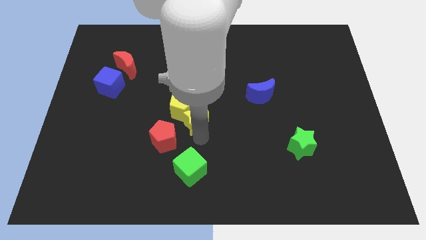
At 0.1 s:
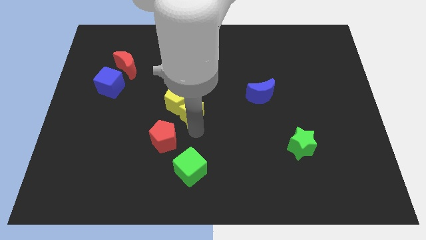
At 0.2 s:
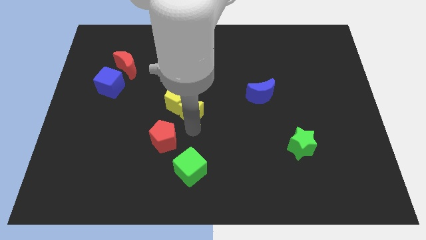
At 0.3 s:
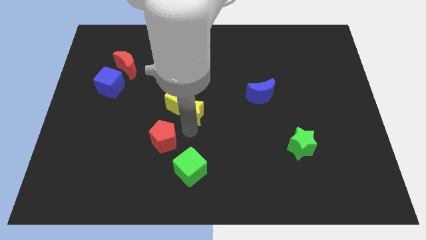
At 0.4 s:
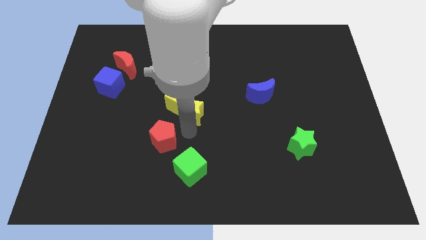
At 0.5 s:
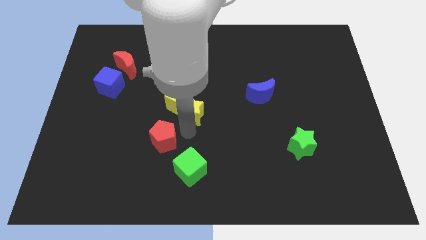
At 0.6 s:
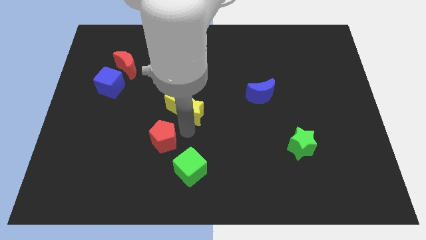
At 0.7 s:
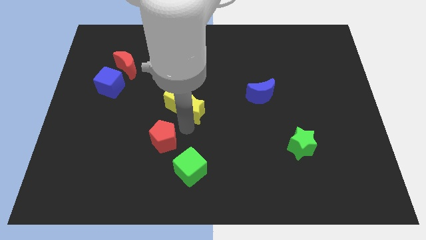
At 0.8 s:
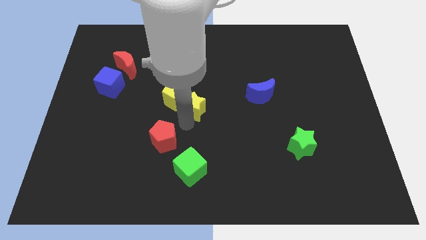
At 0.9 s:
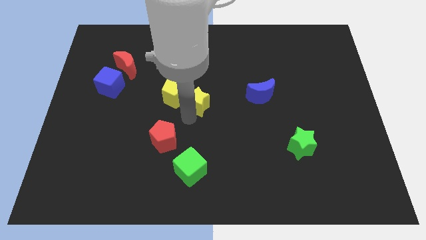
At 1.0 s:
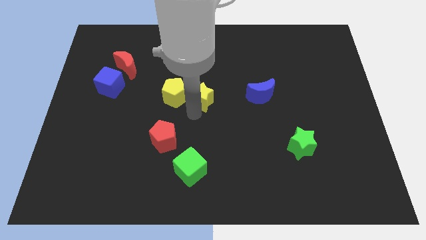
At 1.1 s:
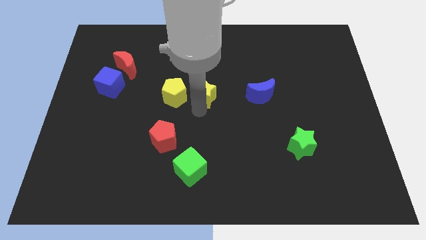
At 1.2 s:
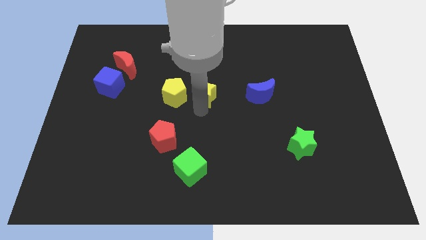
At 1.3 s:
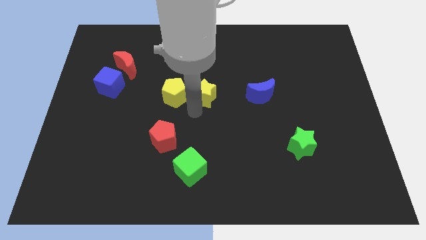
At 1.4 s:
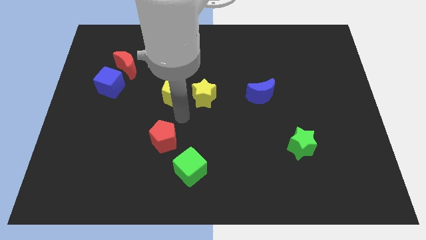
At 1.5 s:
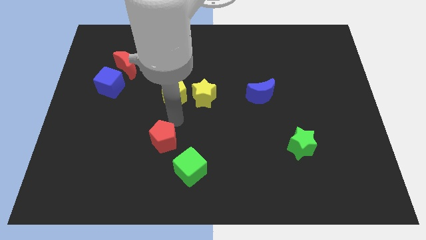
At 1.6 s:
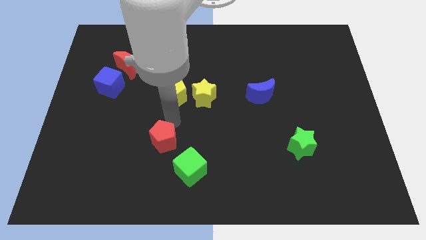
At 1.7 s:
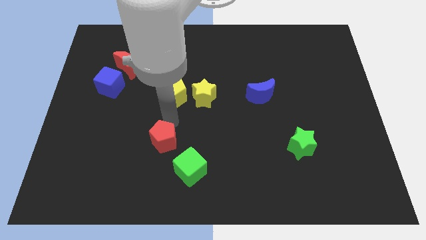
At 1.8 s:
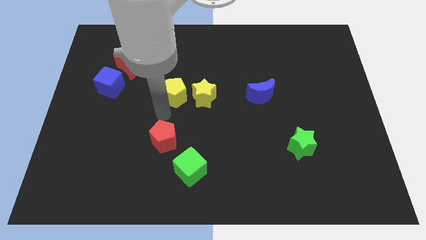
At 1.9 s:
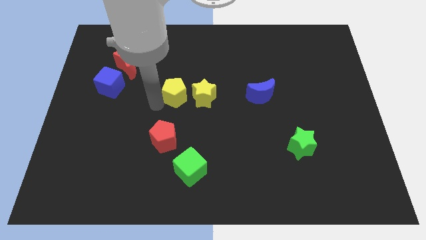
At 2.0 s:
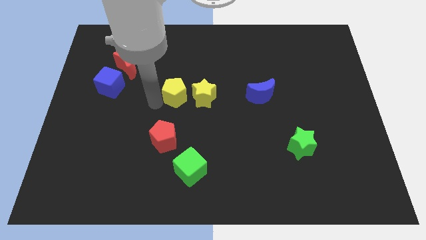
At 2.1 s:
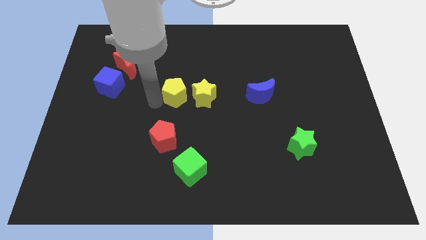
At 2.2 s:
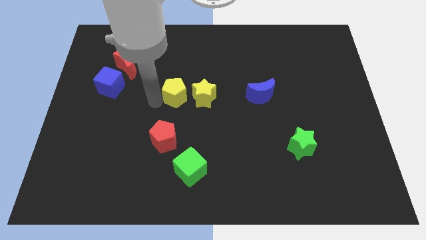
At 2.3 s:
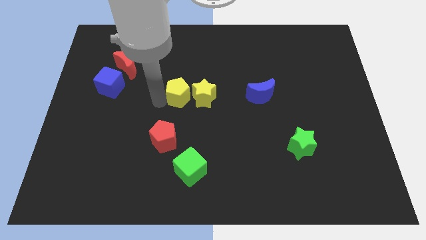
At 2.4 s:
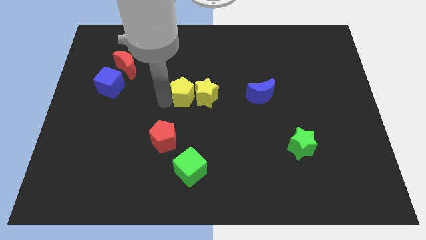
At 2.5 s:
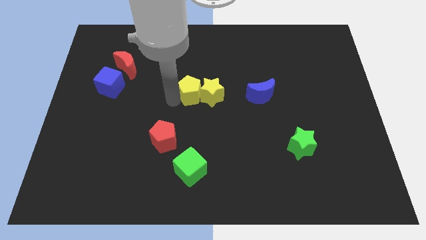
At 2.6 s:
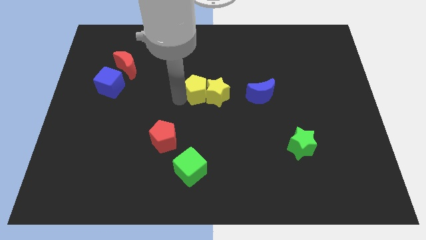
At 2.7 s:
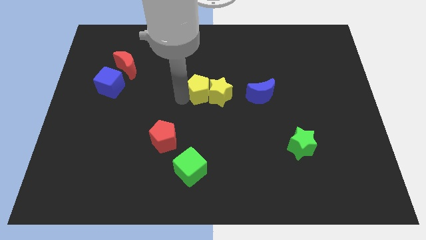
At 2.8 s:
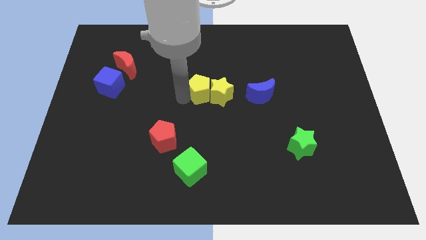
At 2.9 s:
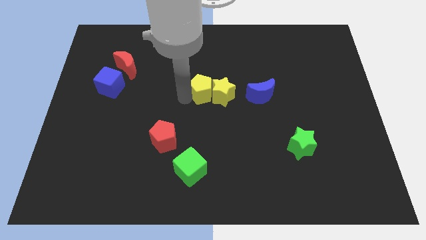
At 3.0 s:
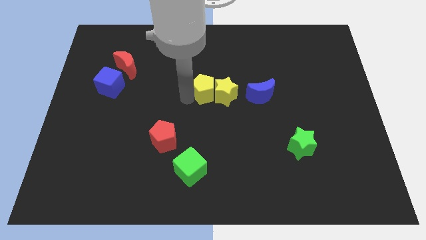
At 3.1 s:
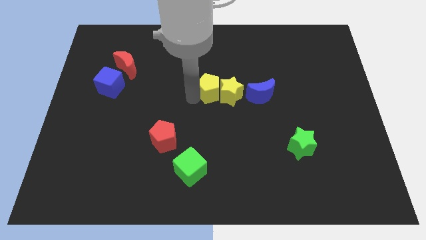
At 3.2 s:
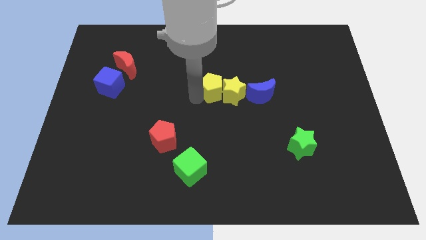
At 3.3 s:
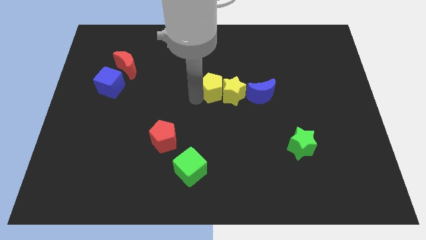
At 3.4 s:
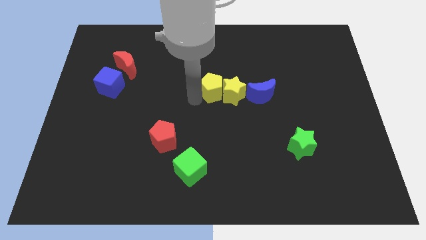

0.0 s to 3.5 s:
move the yellow blocks left to the blue moon

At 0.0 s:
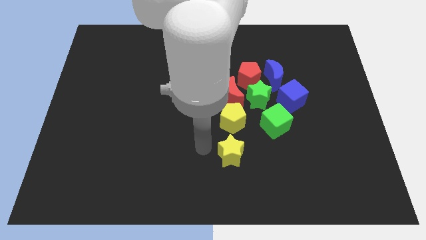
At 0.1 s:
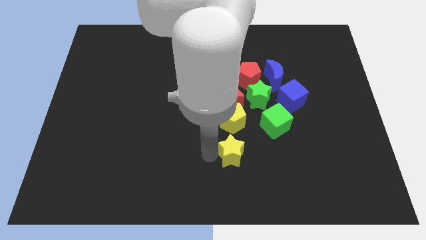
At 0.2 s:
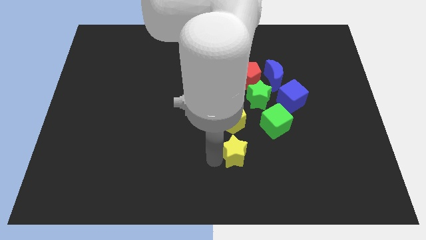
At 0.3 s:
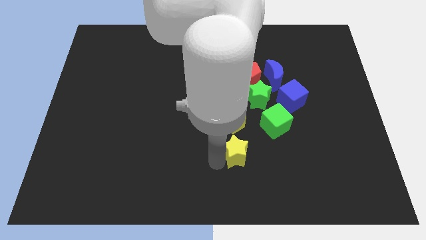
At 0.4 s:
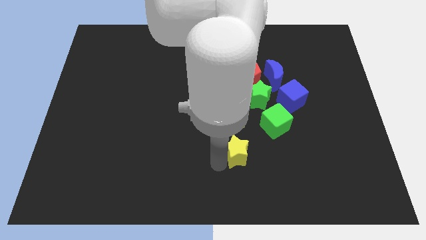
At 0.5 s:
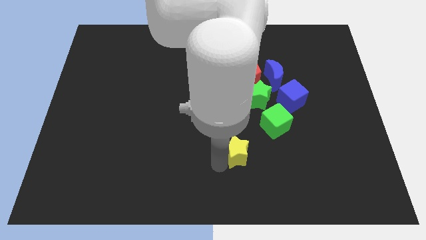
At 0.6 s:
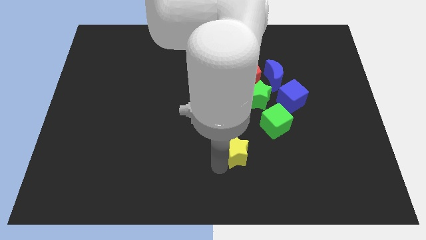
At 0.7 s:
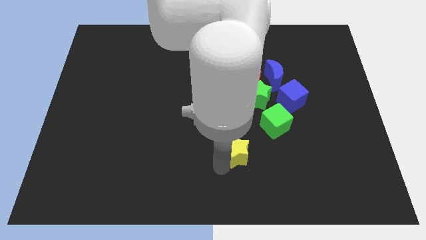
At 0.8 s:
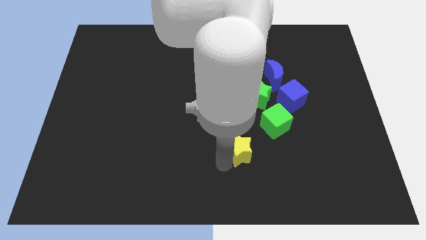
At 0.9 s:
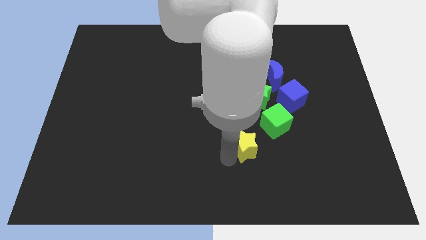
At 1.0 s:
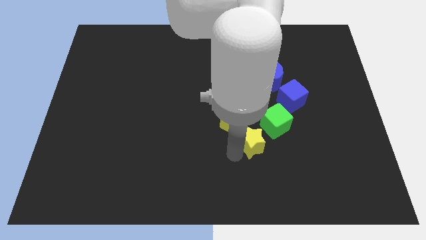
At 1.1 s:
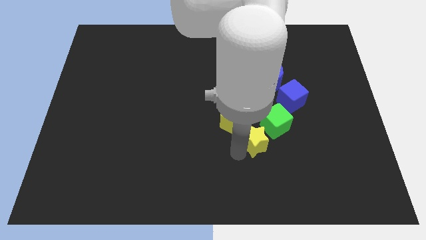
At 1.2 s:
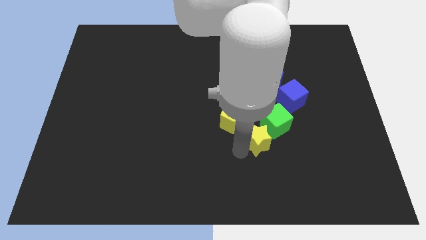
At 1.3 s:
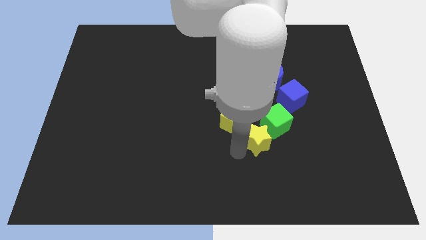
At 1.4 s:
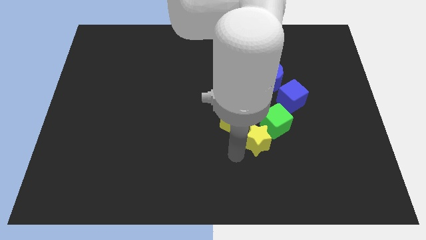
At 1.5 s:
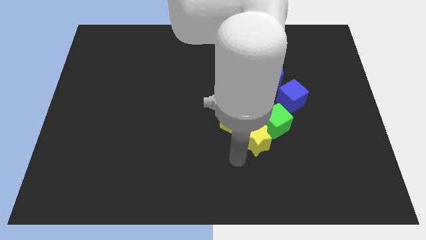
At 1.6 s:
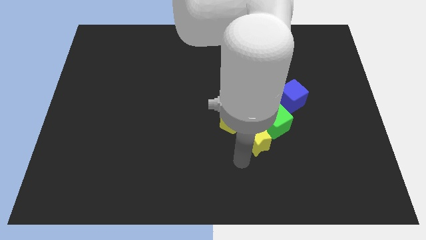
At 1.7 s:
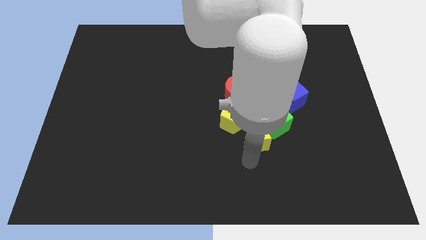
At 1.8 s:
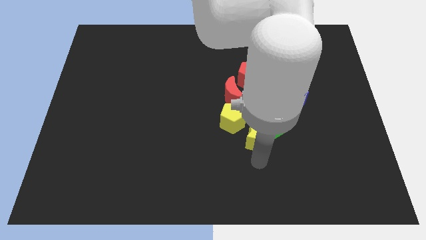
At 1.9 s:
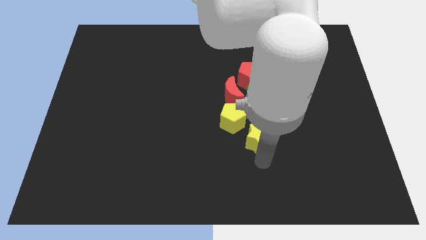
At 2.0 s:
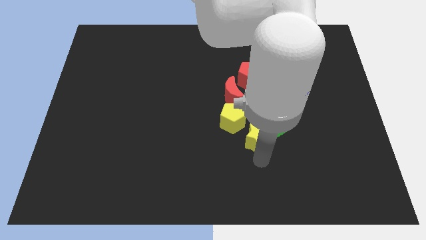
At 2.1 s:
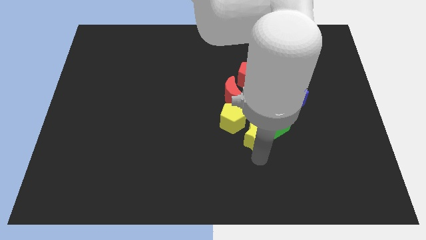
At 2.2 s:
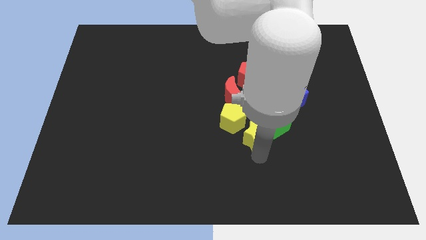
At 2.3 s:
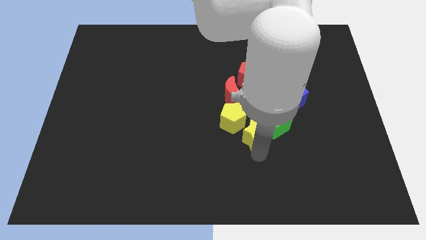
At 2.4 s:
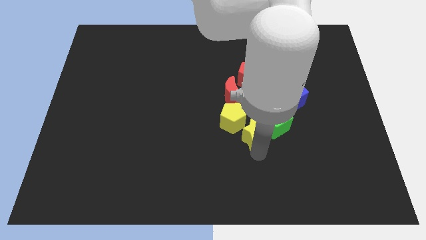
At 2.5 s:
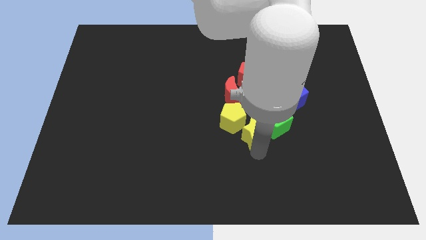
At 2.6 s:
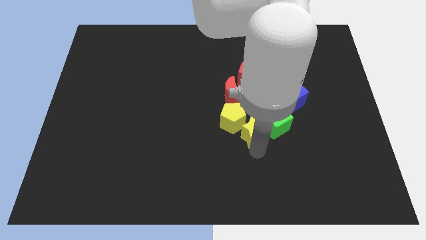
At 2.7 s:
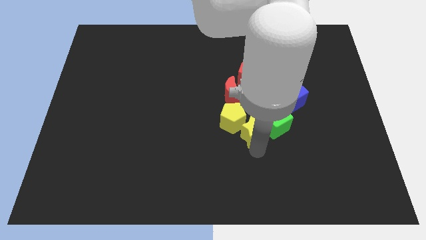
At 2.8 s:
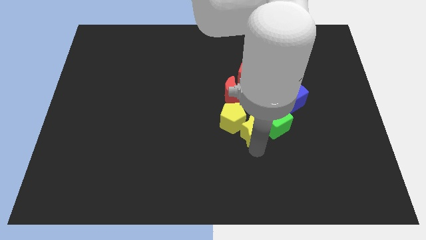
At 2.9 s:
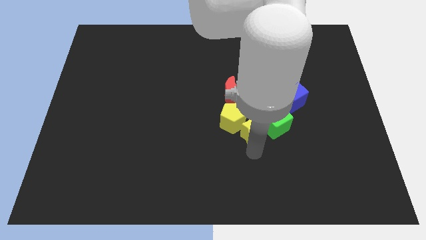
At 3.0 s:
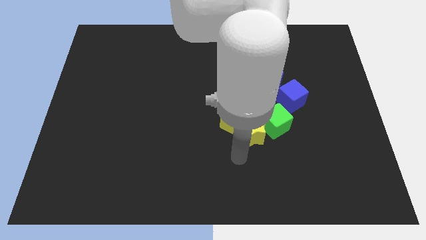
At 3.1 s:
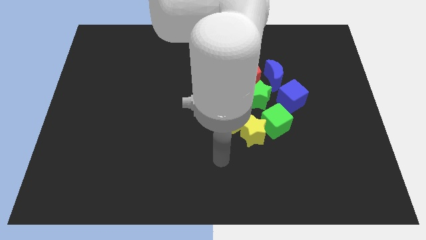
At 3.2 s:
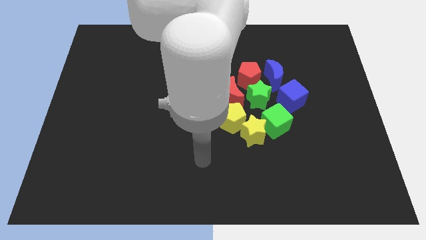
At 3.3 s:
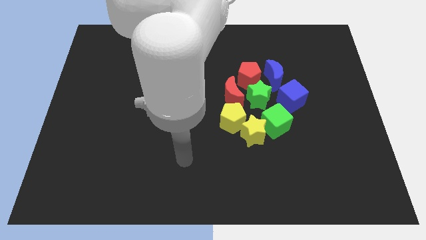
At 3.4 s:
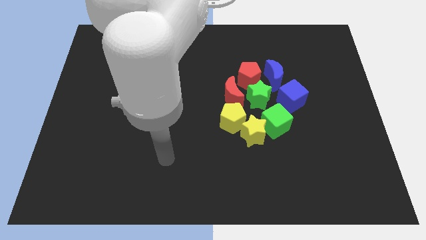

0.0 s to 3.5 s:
place the yellow star in between the yellow pentagon and green cube

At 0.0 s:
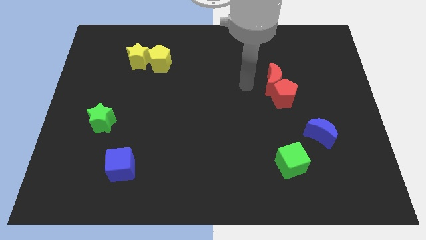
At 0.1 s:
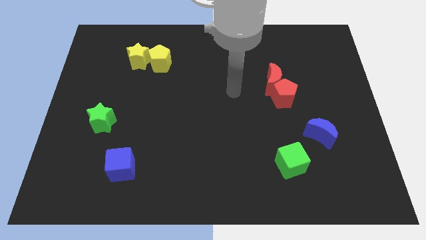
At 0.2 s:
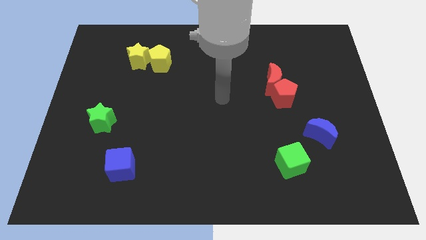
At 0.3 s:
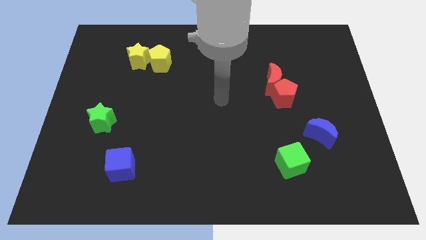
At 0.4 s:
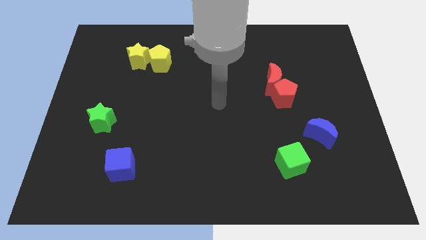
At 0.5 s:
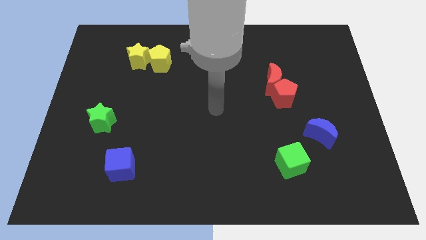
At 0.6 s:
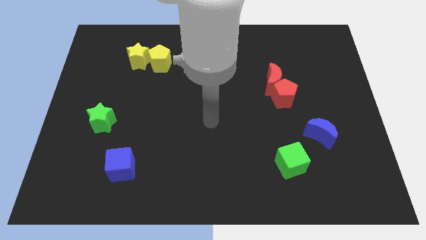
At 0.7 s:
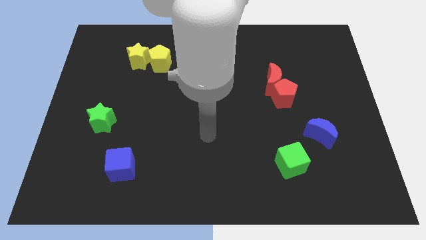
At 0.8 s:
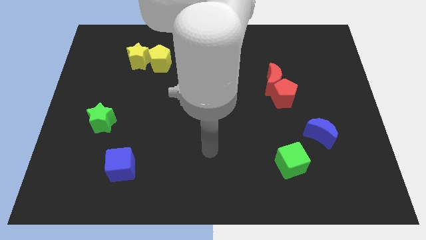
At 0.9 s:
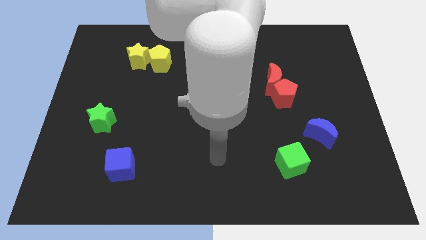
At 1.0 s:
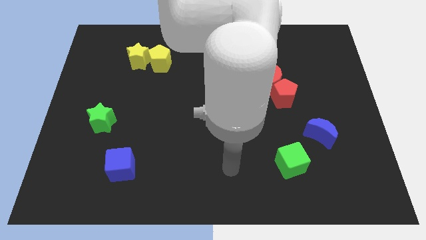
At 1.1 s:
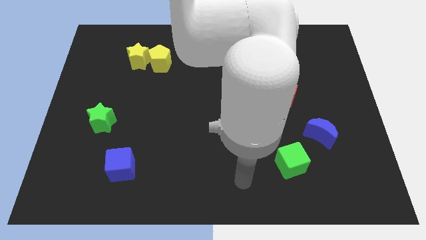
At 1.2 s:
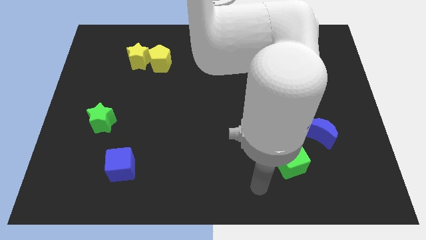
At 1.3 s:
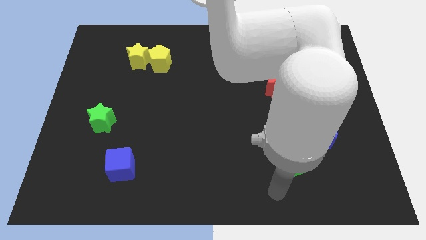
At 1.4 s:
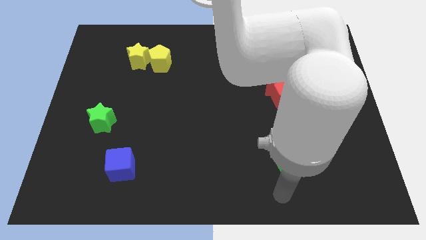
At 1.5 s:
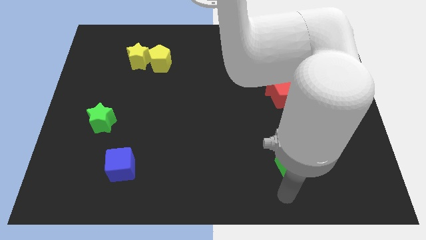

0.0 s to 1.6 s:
move your arm to the bottom of the green cube

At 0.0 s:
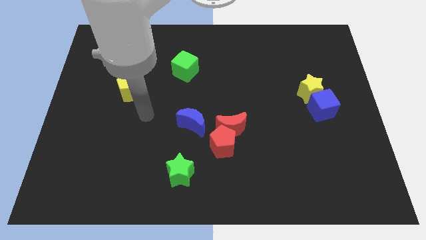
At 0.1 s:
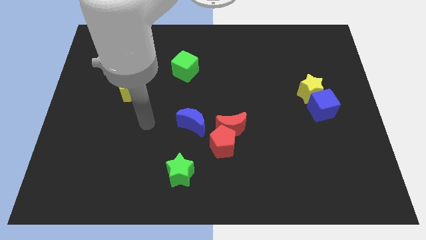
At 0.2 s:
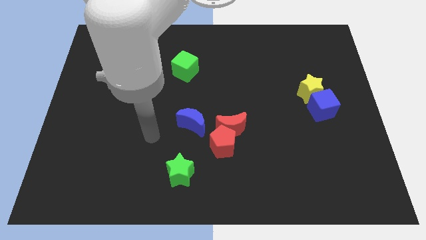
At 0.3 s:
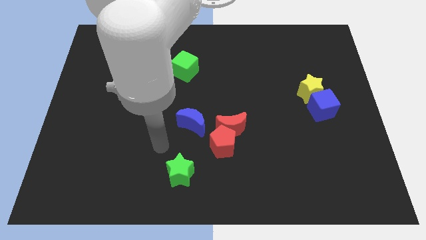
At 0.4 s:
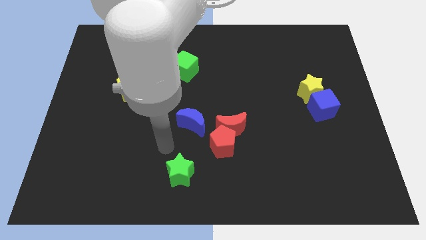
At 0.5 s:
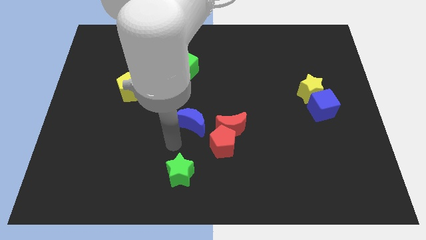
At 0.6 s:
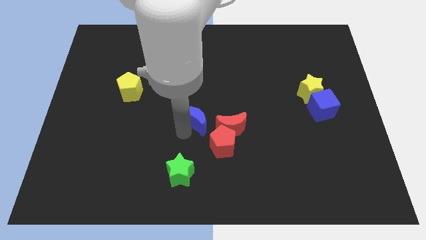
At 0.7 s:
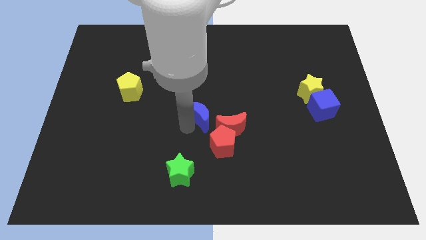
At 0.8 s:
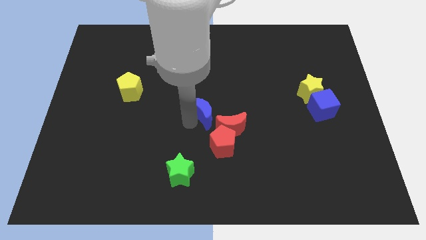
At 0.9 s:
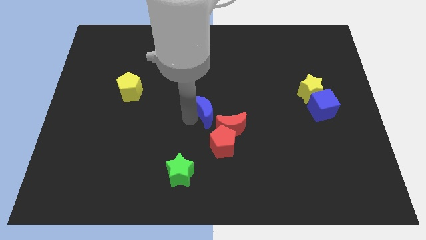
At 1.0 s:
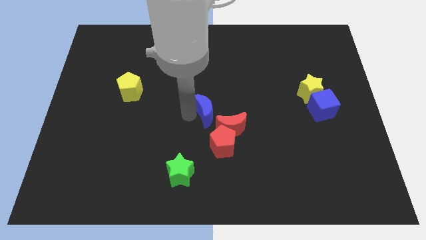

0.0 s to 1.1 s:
push the blue crescent towards the center of the board
